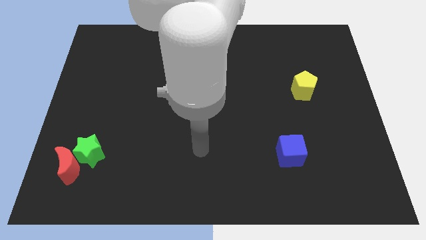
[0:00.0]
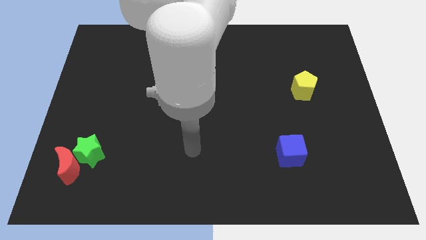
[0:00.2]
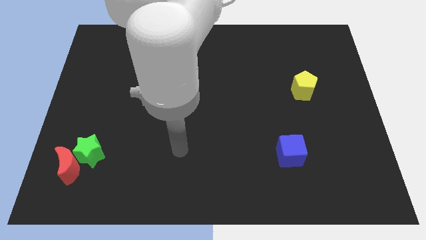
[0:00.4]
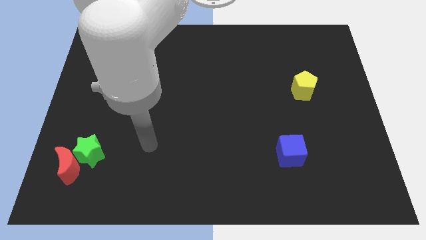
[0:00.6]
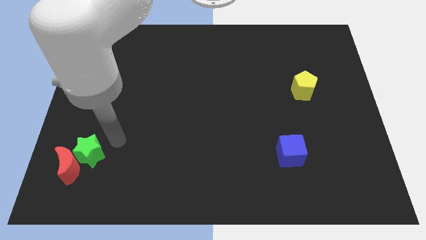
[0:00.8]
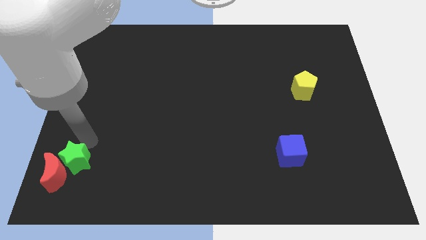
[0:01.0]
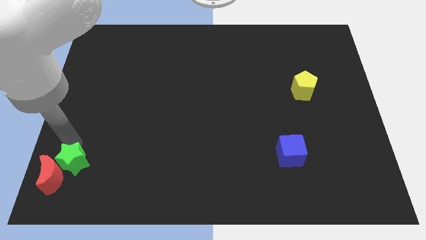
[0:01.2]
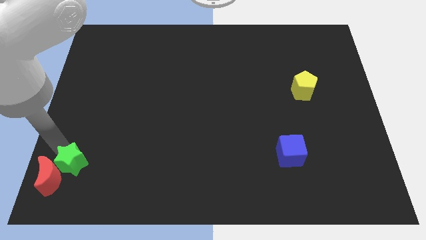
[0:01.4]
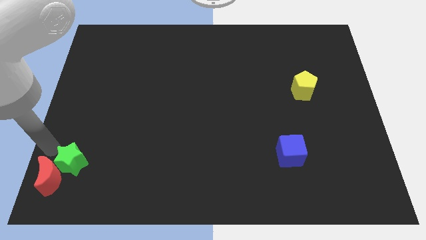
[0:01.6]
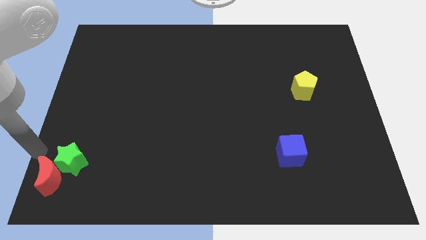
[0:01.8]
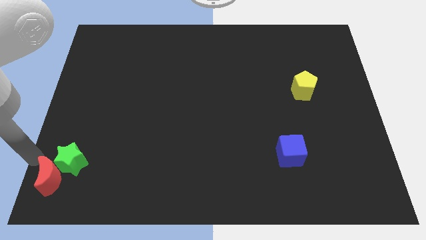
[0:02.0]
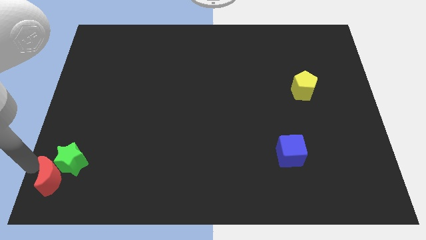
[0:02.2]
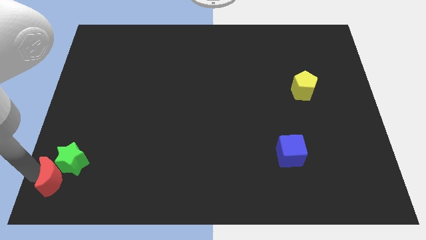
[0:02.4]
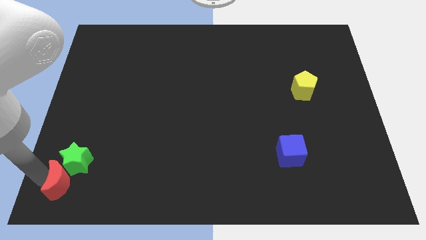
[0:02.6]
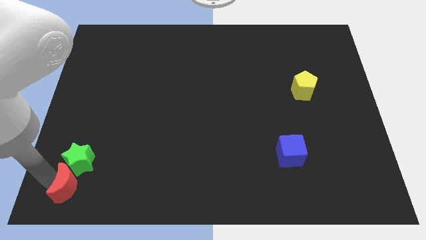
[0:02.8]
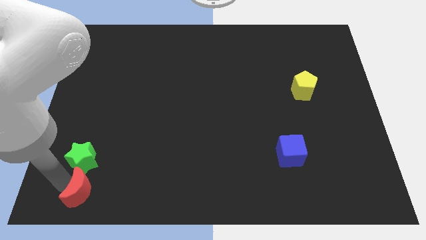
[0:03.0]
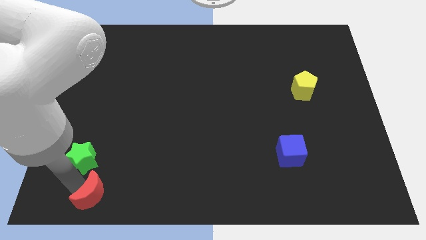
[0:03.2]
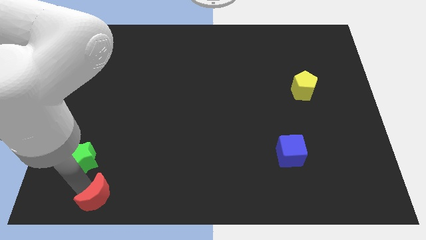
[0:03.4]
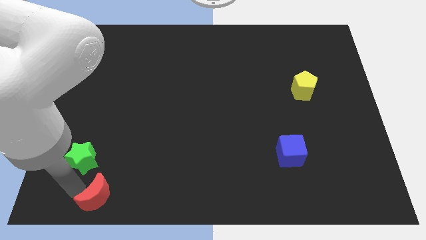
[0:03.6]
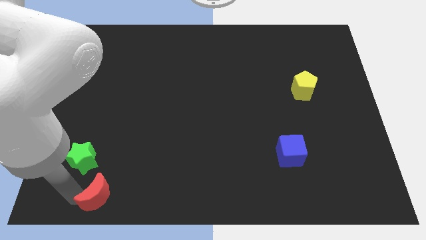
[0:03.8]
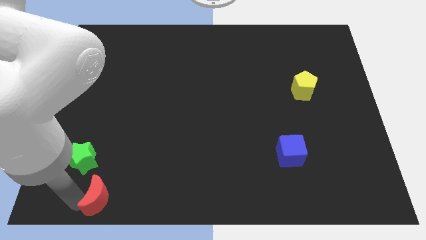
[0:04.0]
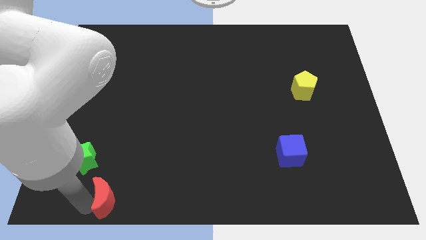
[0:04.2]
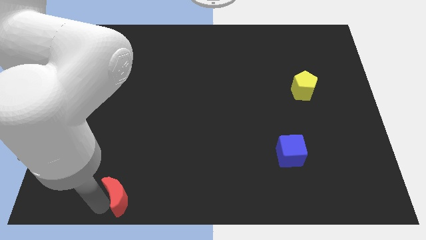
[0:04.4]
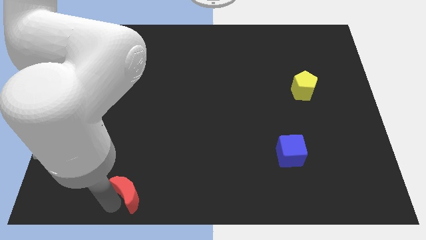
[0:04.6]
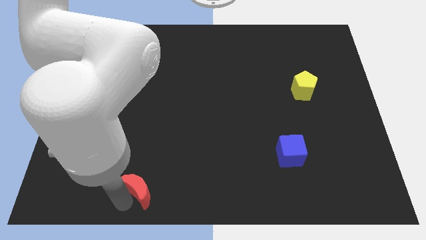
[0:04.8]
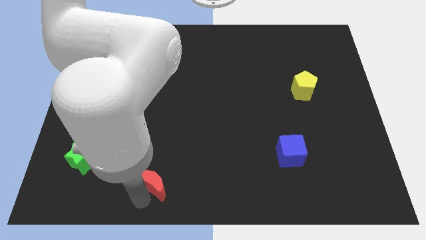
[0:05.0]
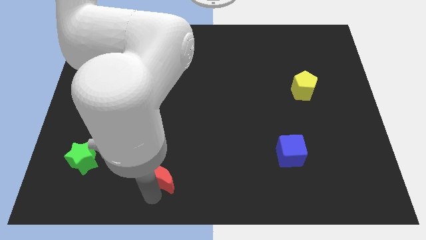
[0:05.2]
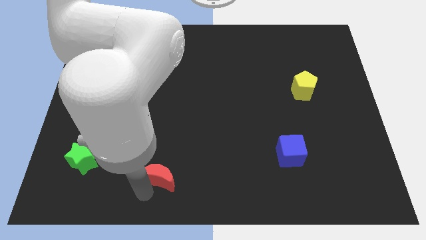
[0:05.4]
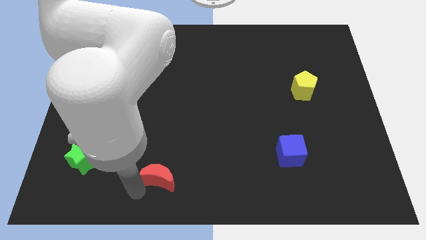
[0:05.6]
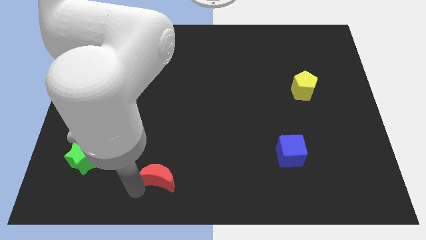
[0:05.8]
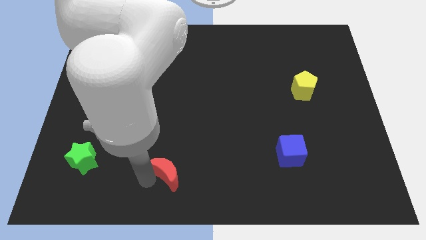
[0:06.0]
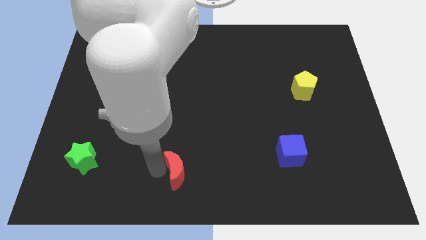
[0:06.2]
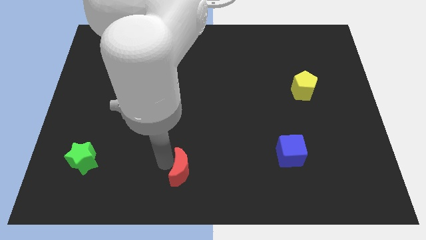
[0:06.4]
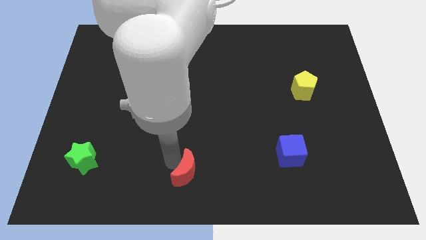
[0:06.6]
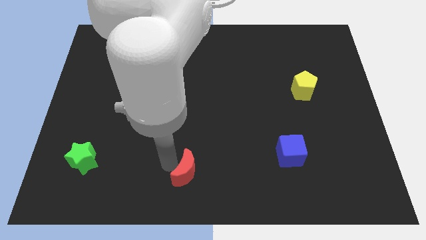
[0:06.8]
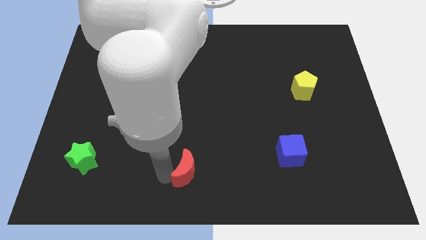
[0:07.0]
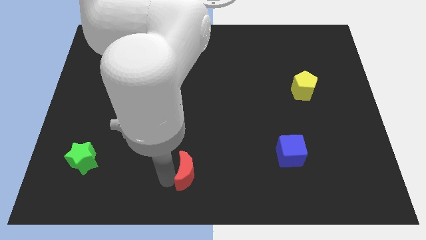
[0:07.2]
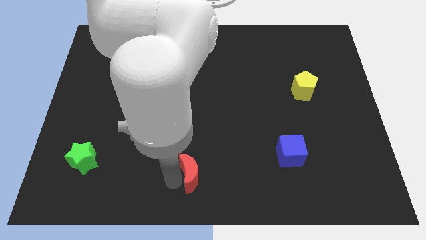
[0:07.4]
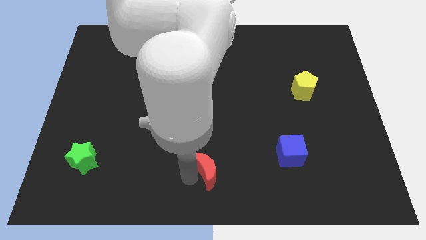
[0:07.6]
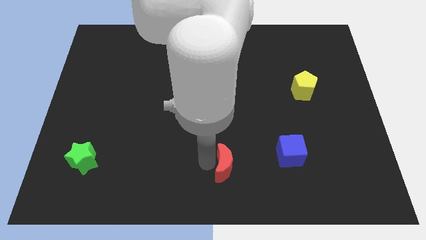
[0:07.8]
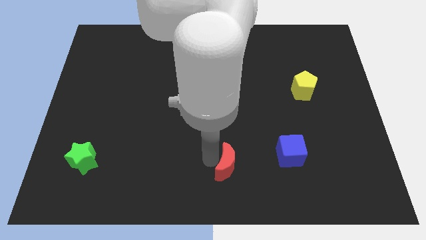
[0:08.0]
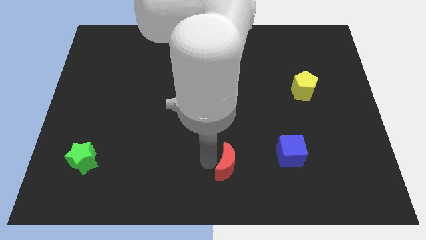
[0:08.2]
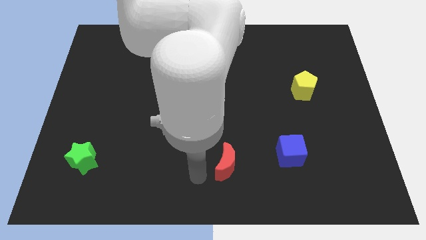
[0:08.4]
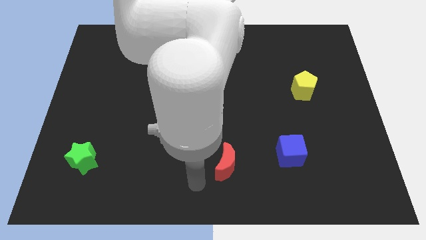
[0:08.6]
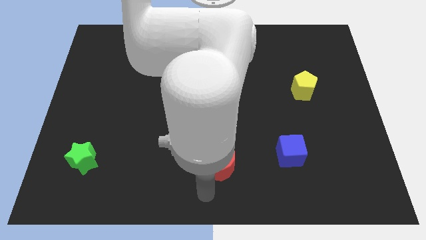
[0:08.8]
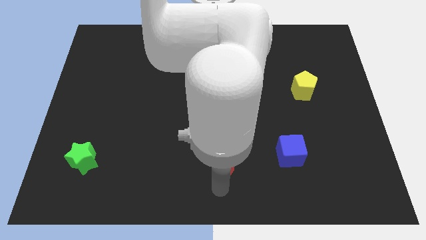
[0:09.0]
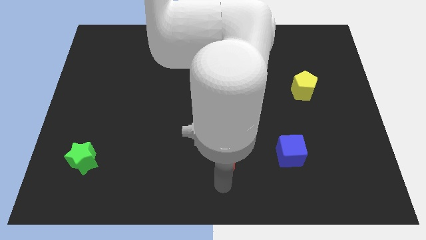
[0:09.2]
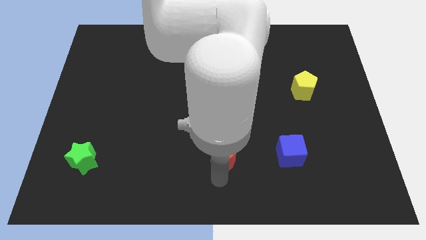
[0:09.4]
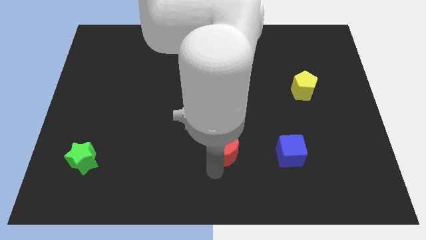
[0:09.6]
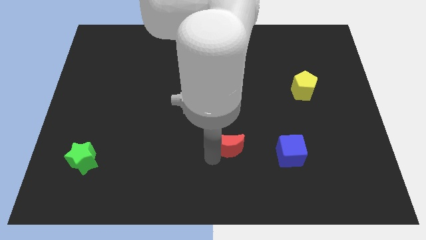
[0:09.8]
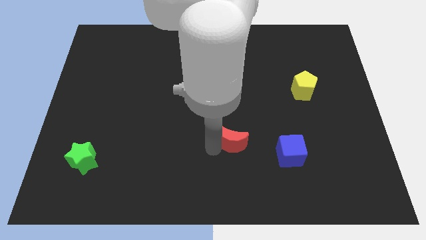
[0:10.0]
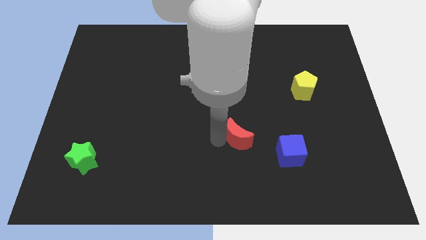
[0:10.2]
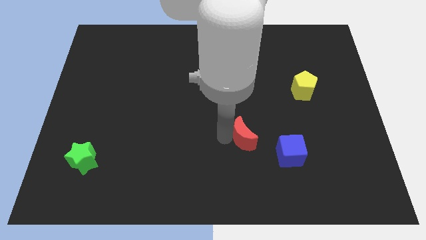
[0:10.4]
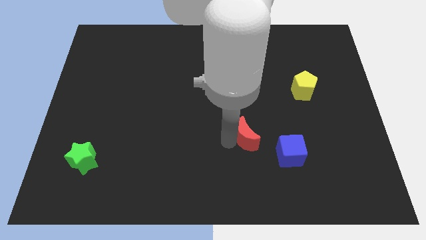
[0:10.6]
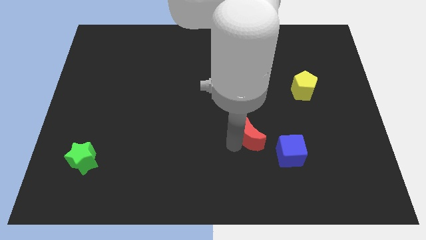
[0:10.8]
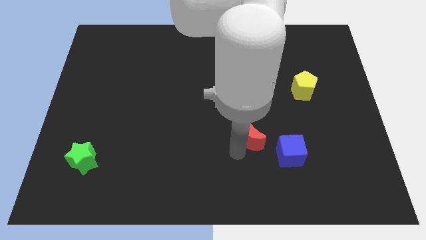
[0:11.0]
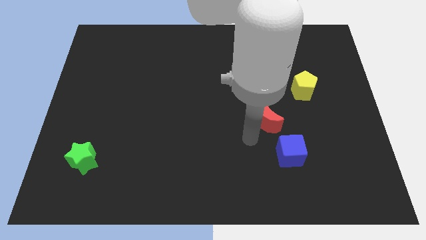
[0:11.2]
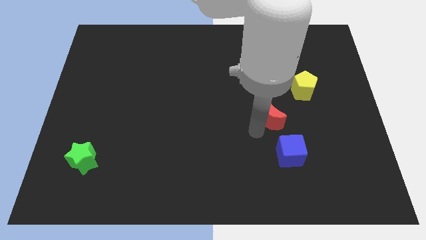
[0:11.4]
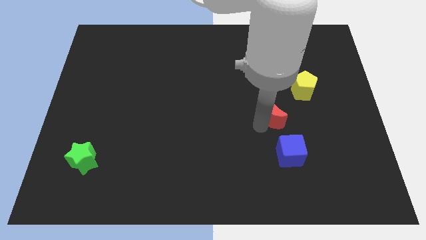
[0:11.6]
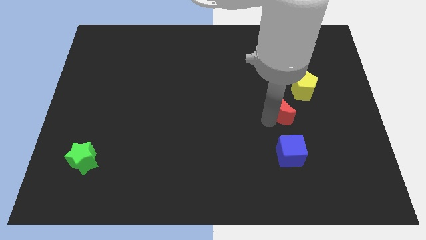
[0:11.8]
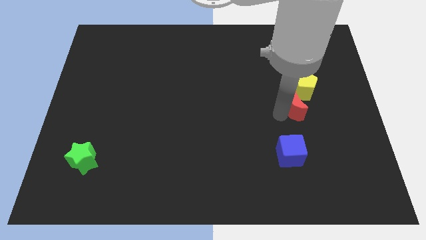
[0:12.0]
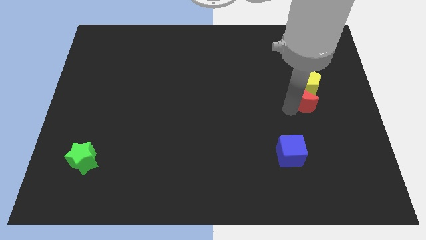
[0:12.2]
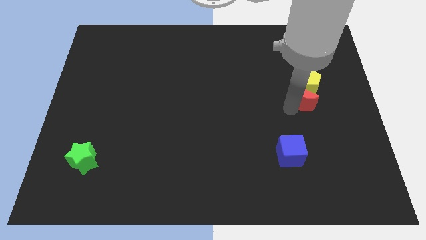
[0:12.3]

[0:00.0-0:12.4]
move the red moon towards the pentagon

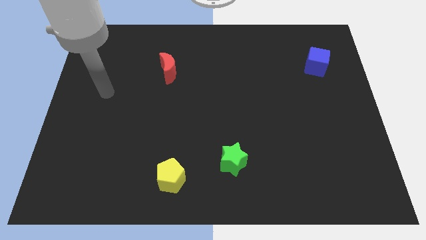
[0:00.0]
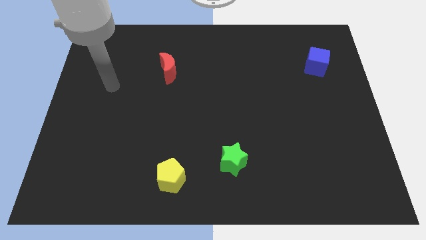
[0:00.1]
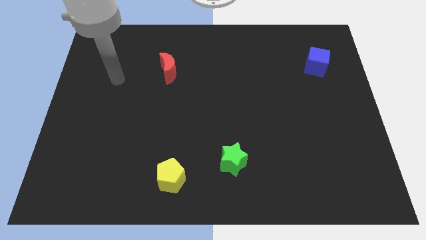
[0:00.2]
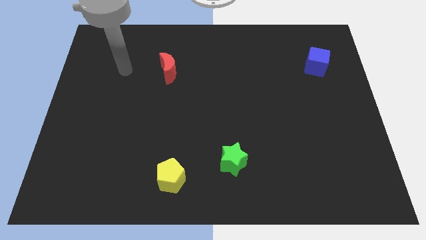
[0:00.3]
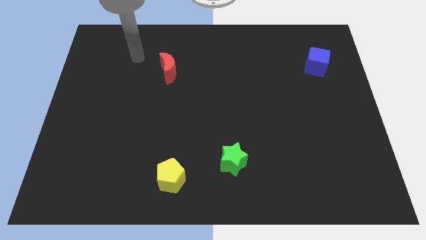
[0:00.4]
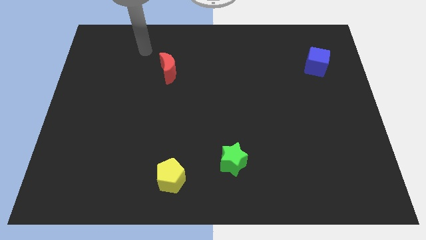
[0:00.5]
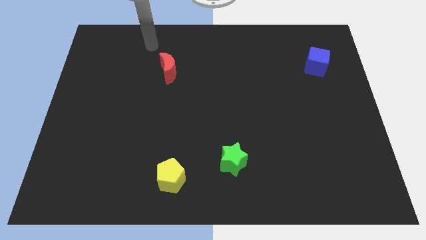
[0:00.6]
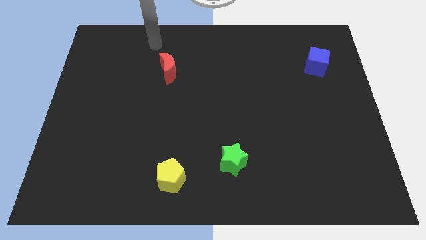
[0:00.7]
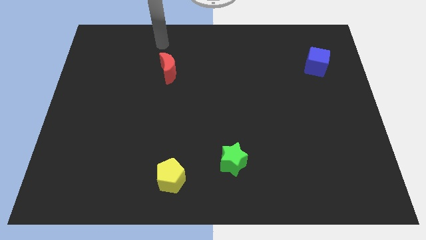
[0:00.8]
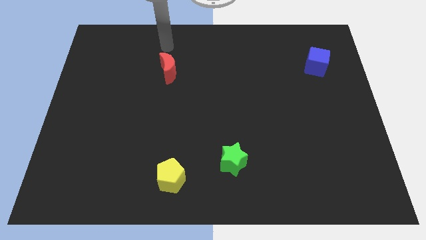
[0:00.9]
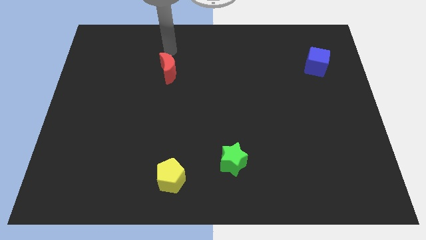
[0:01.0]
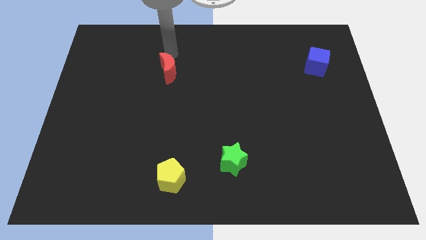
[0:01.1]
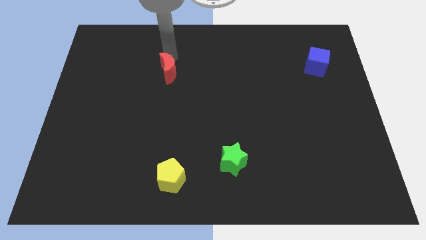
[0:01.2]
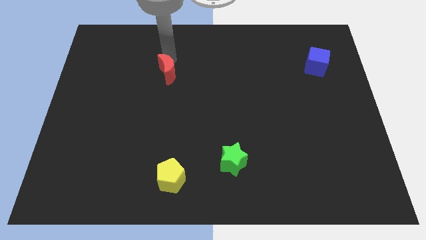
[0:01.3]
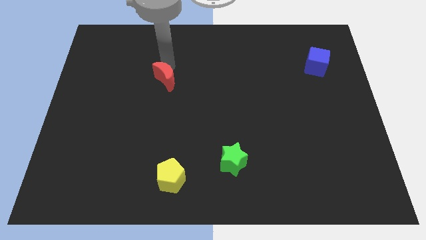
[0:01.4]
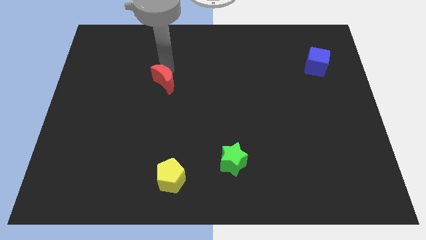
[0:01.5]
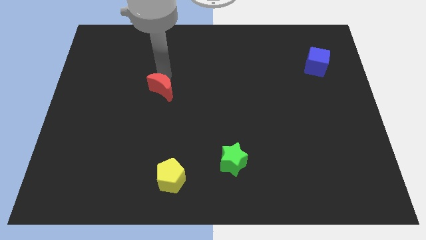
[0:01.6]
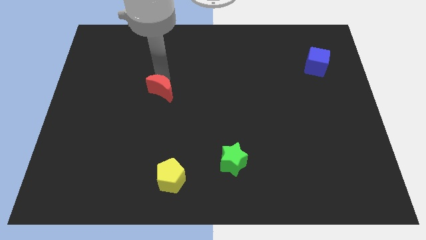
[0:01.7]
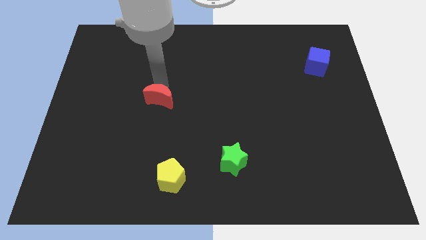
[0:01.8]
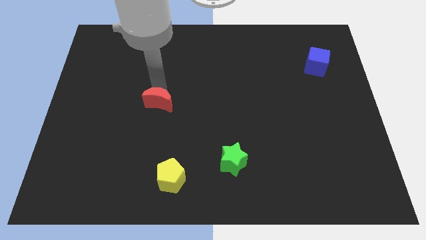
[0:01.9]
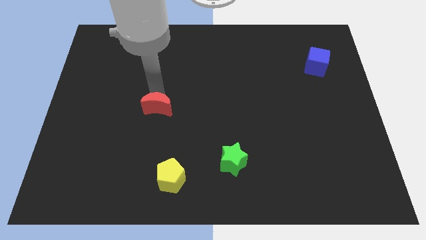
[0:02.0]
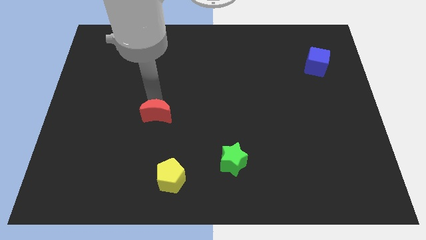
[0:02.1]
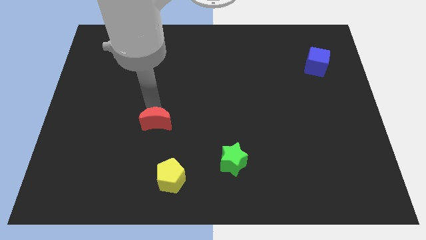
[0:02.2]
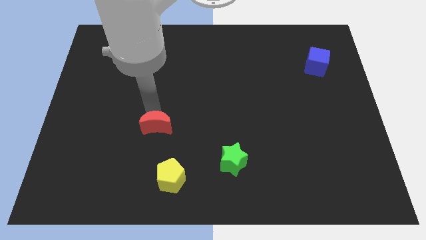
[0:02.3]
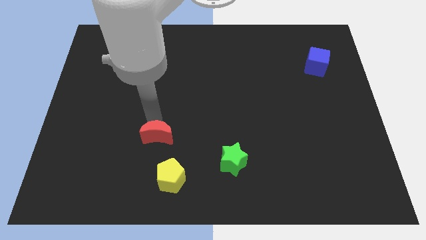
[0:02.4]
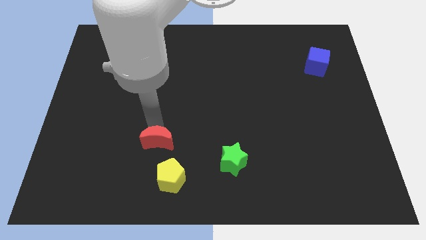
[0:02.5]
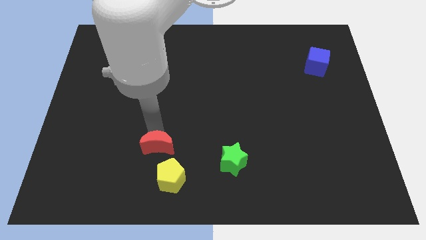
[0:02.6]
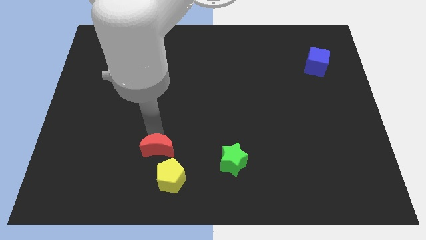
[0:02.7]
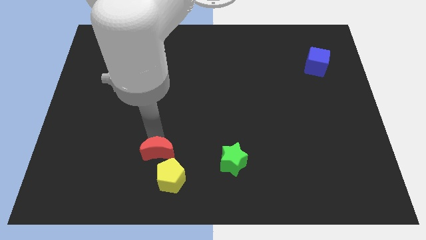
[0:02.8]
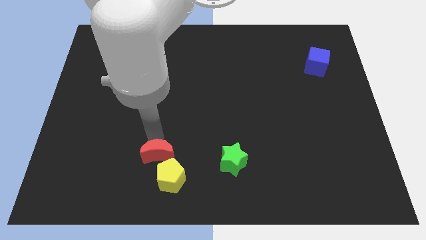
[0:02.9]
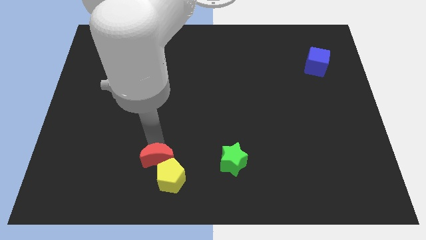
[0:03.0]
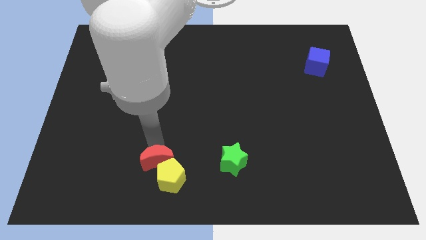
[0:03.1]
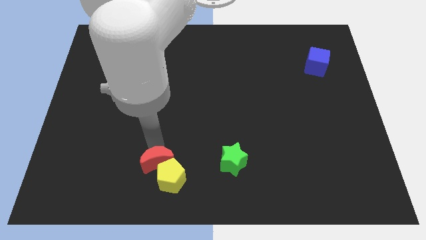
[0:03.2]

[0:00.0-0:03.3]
push the red block next to the yellow block
